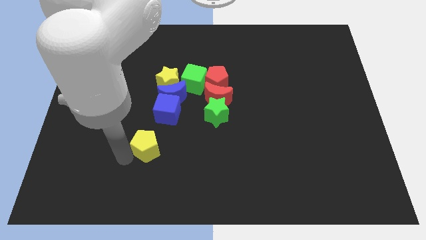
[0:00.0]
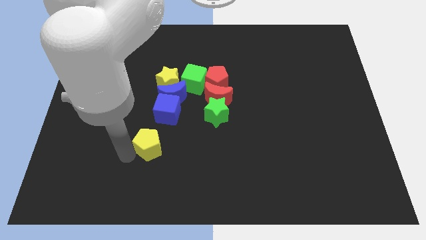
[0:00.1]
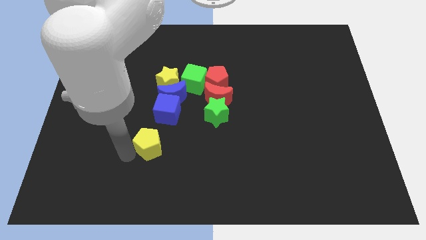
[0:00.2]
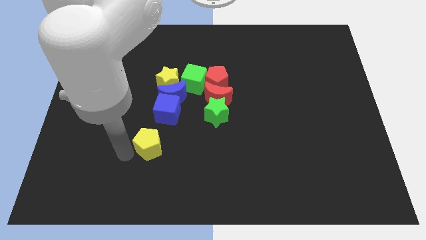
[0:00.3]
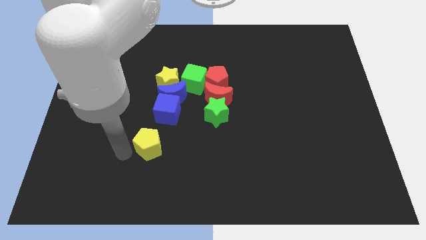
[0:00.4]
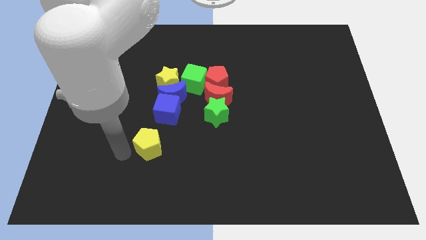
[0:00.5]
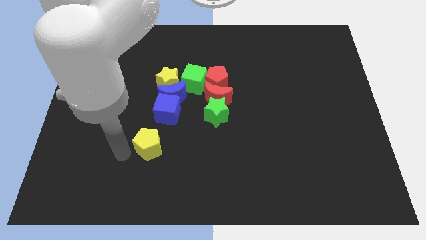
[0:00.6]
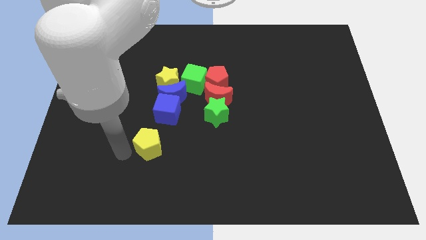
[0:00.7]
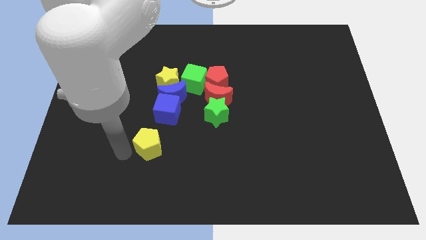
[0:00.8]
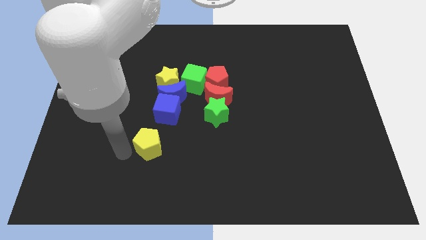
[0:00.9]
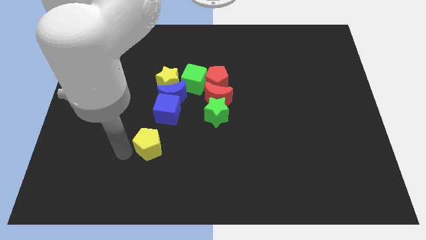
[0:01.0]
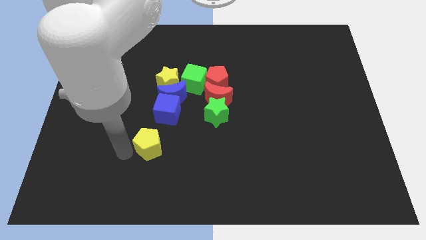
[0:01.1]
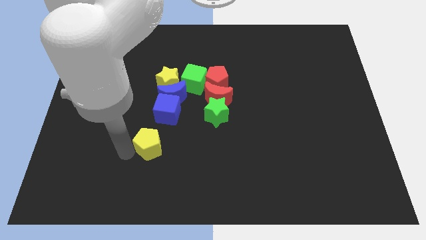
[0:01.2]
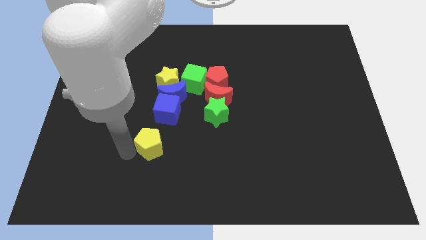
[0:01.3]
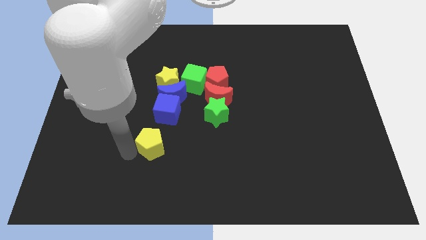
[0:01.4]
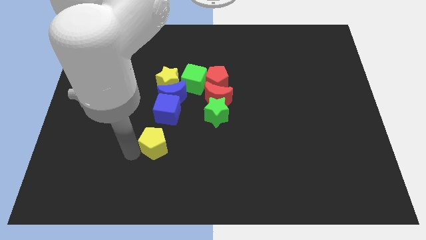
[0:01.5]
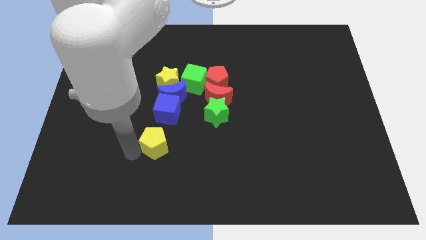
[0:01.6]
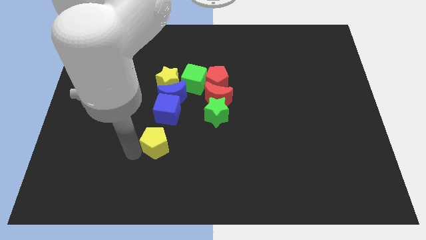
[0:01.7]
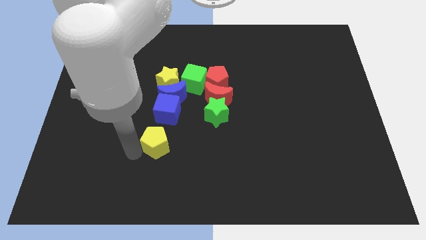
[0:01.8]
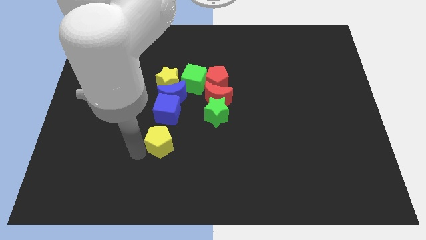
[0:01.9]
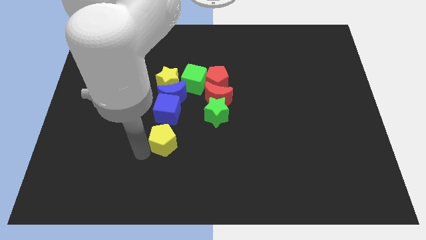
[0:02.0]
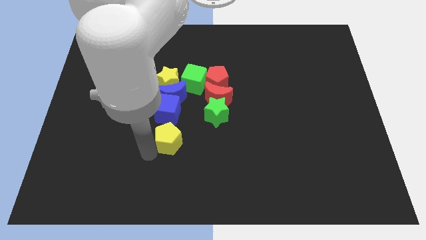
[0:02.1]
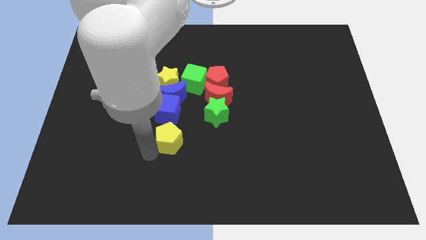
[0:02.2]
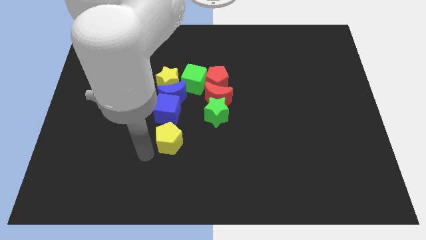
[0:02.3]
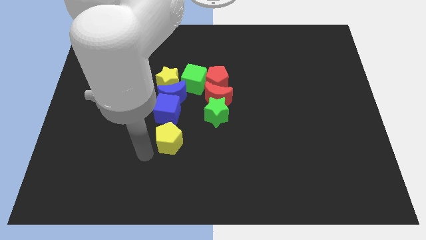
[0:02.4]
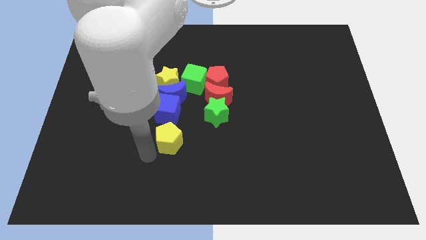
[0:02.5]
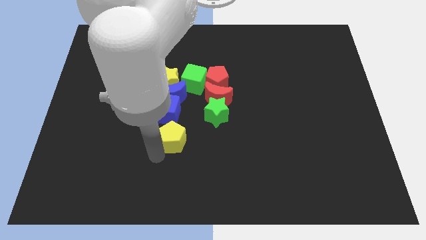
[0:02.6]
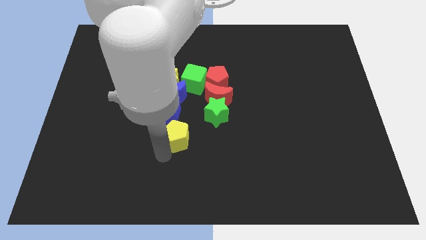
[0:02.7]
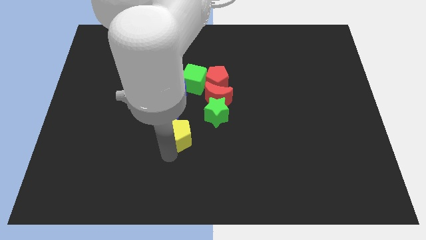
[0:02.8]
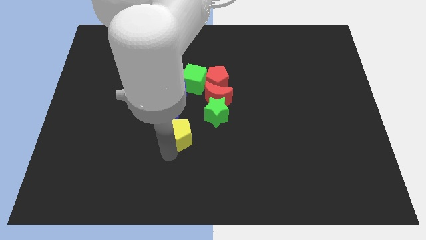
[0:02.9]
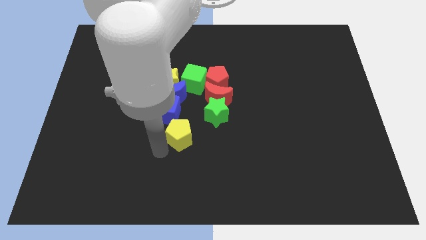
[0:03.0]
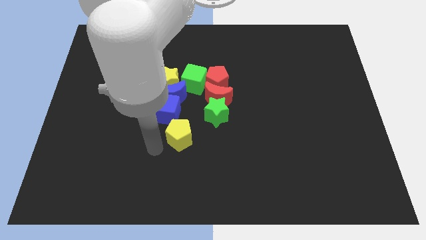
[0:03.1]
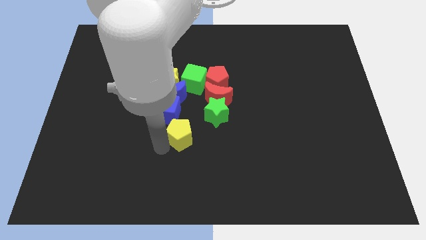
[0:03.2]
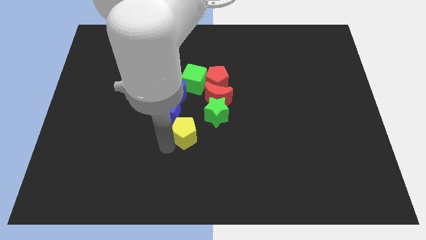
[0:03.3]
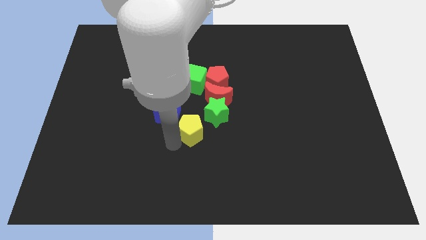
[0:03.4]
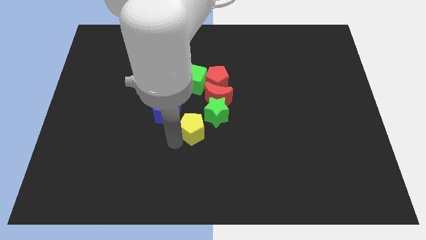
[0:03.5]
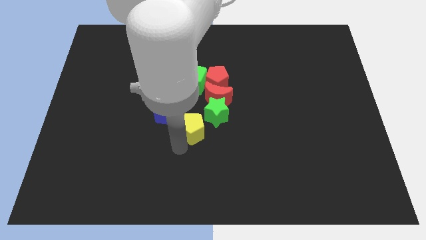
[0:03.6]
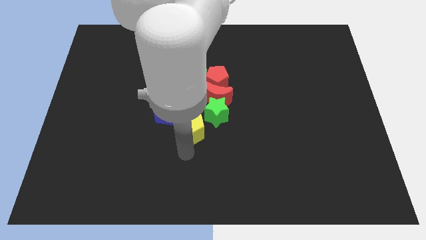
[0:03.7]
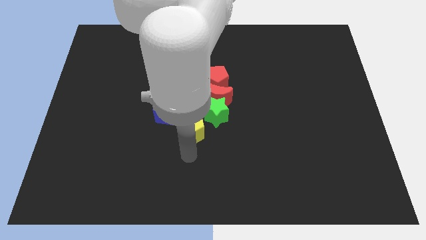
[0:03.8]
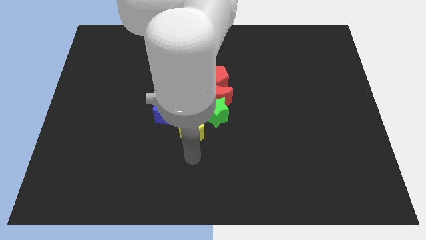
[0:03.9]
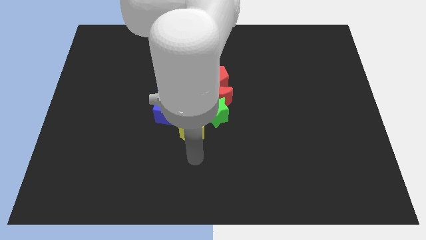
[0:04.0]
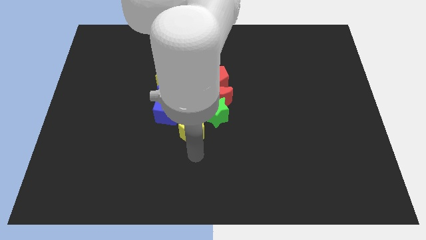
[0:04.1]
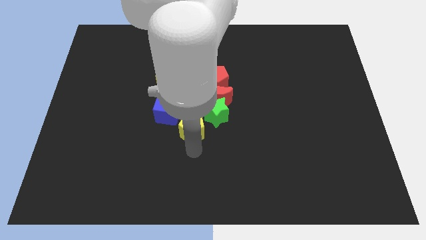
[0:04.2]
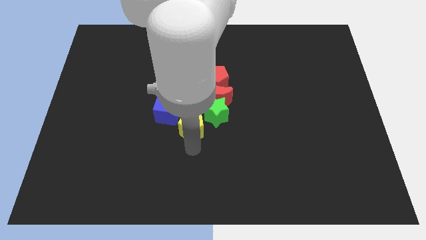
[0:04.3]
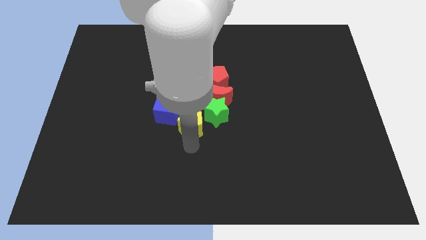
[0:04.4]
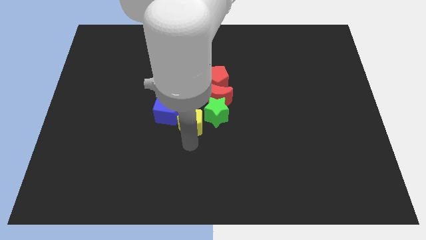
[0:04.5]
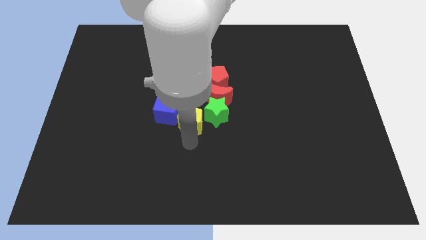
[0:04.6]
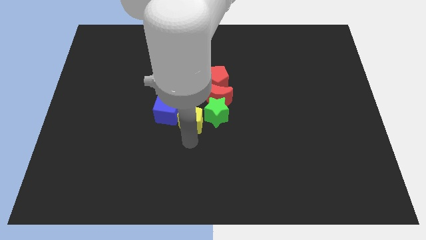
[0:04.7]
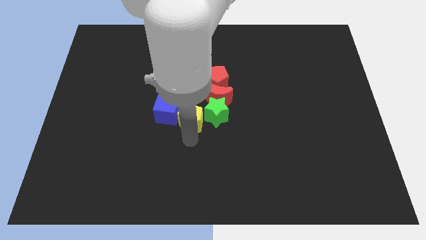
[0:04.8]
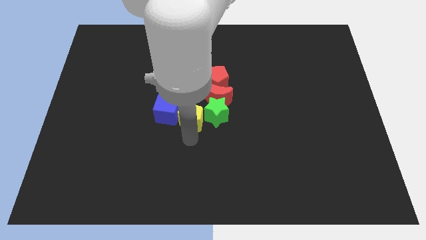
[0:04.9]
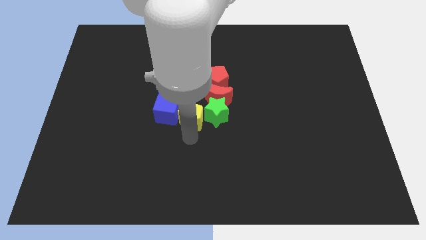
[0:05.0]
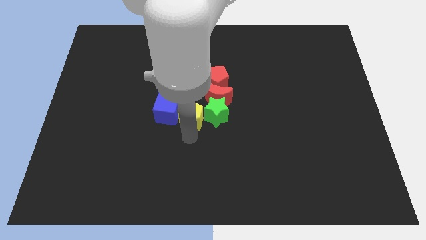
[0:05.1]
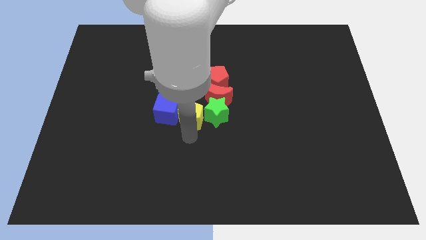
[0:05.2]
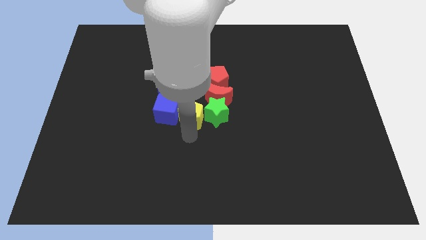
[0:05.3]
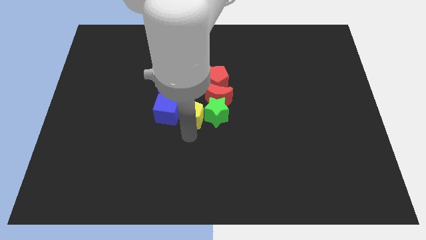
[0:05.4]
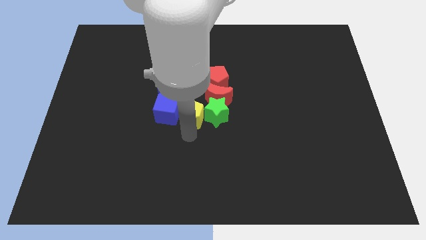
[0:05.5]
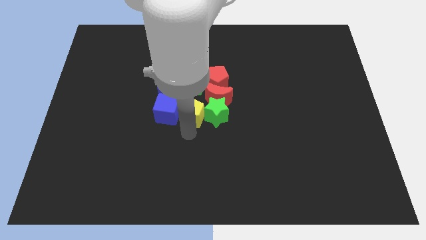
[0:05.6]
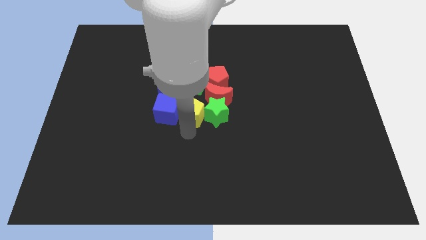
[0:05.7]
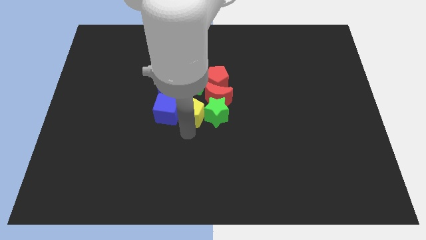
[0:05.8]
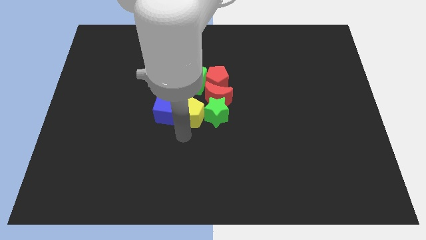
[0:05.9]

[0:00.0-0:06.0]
slide yellow pentagon in between the blue cube and the green star

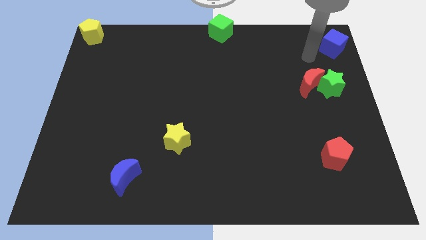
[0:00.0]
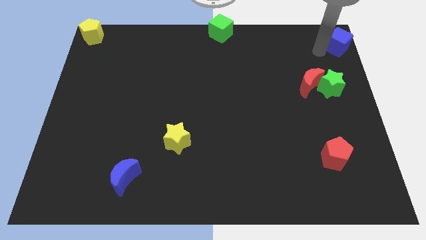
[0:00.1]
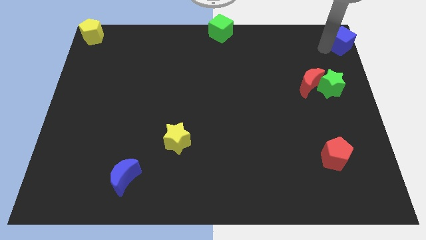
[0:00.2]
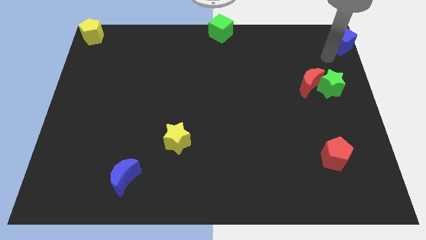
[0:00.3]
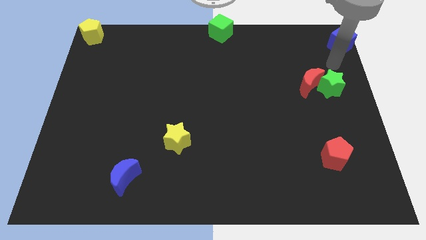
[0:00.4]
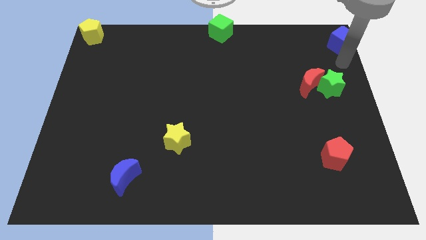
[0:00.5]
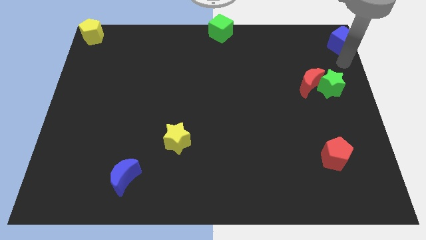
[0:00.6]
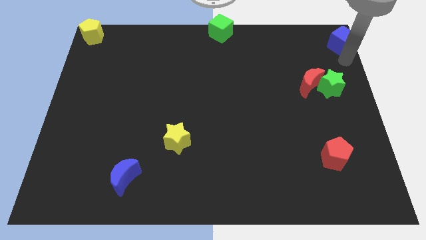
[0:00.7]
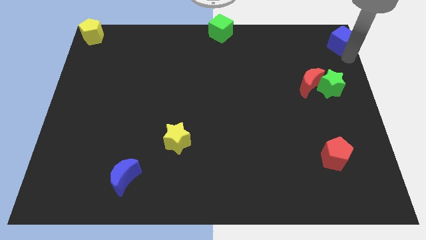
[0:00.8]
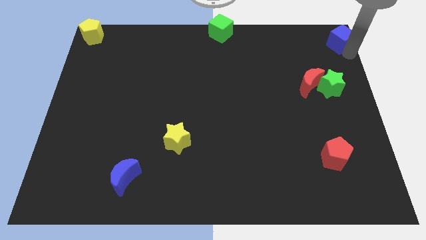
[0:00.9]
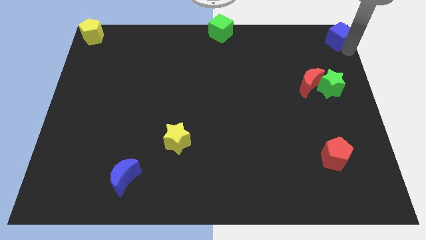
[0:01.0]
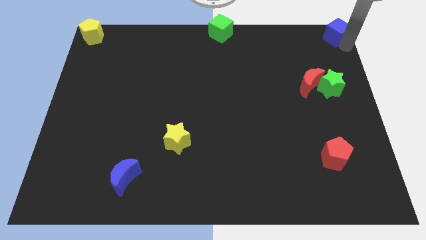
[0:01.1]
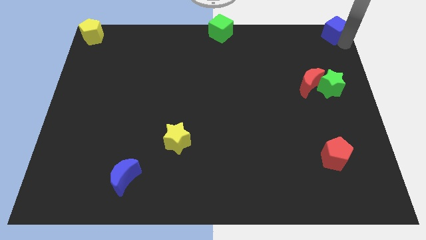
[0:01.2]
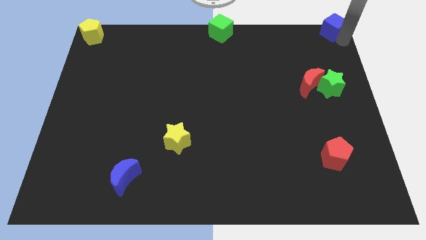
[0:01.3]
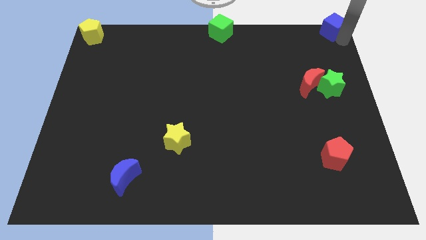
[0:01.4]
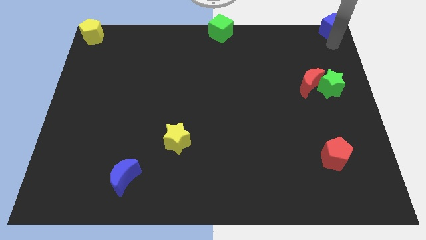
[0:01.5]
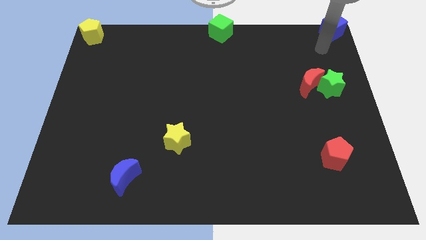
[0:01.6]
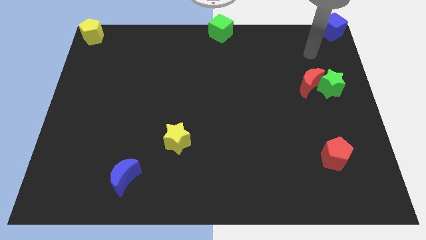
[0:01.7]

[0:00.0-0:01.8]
place blue cube towards top right corner

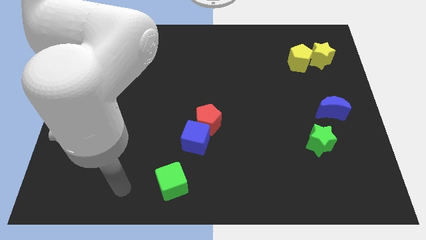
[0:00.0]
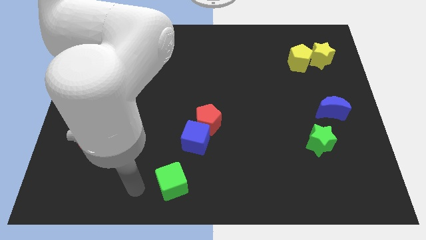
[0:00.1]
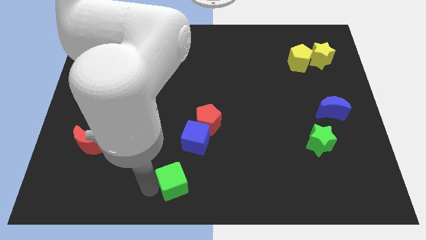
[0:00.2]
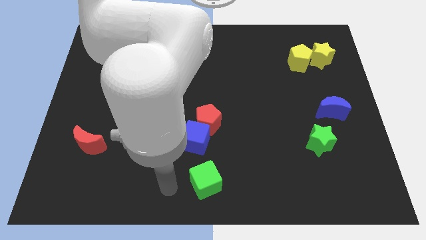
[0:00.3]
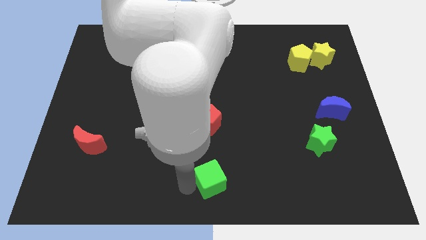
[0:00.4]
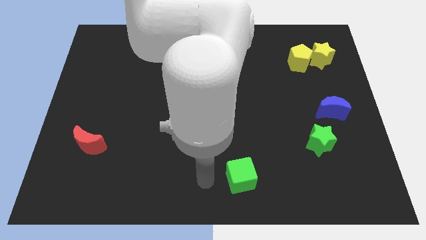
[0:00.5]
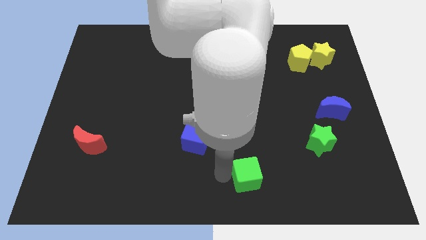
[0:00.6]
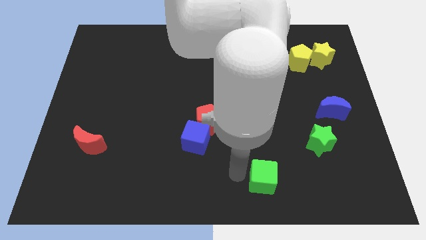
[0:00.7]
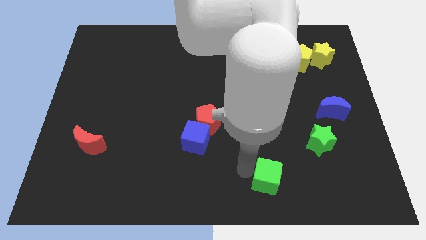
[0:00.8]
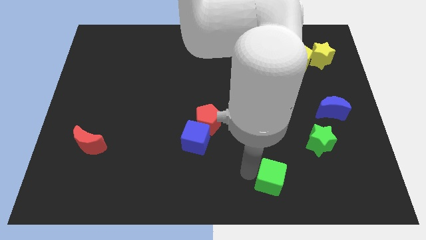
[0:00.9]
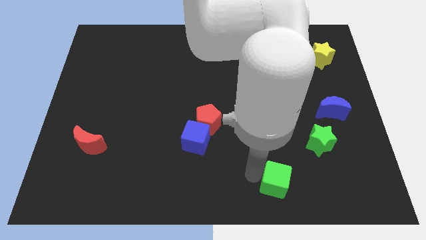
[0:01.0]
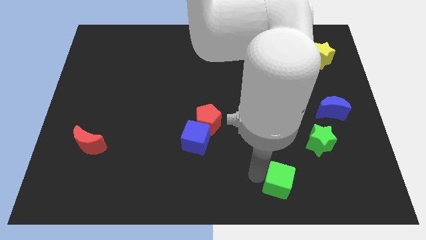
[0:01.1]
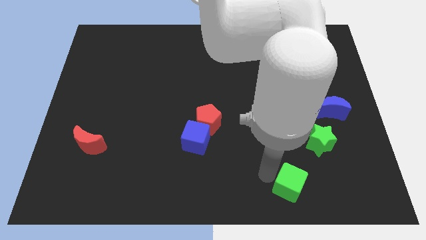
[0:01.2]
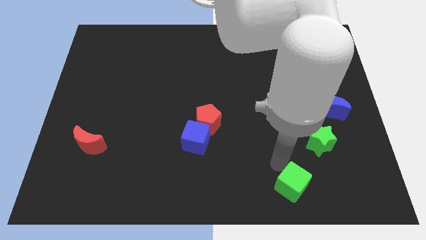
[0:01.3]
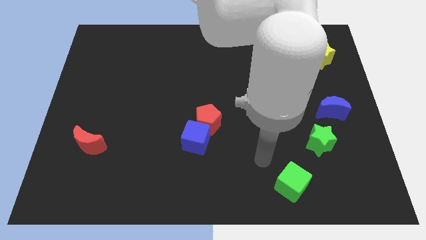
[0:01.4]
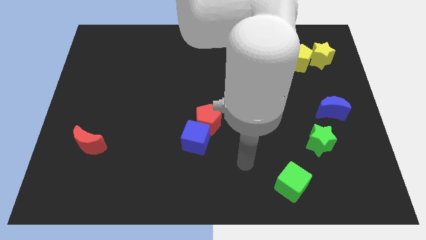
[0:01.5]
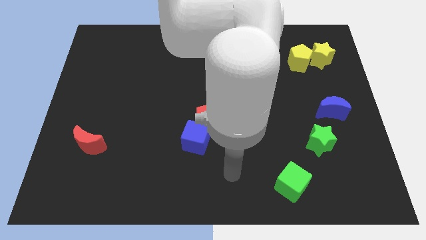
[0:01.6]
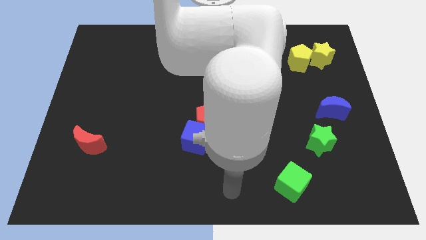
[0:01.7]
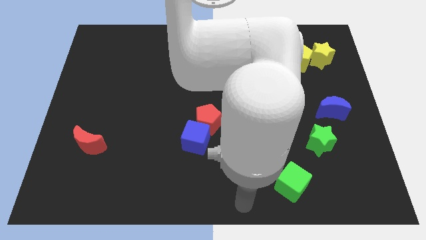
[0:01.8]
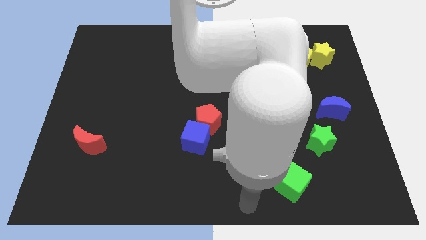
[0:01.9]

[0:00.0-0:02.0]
slide the green cube towards the right side
